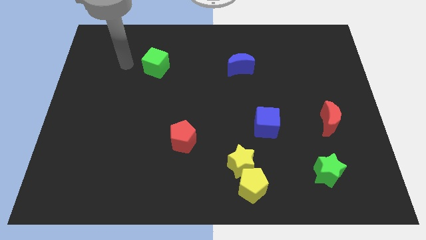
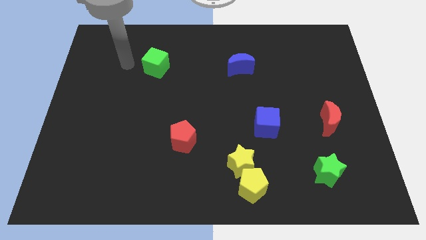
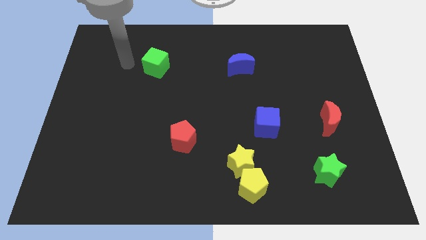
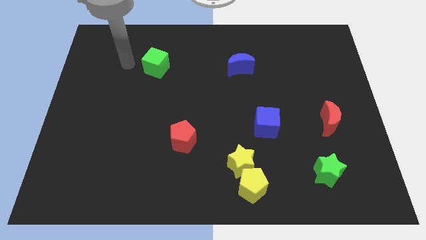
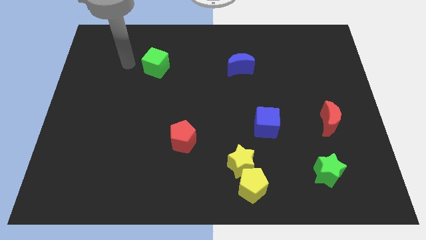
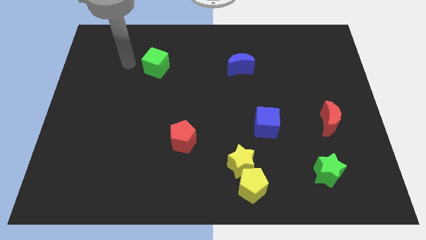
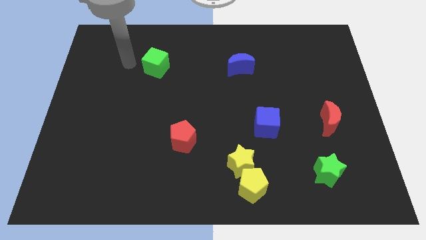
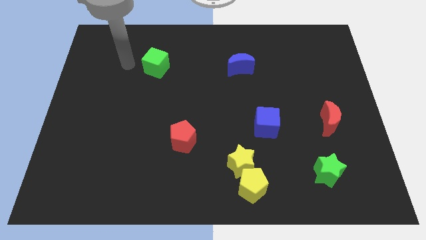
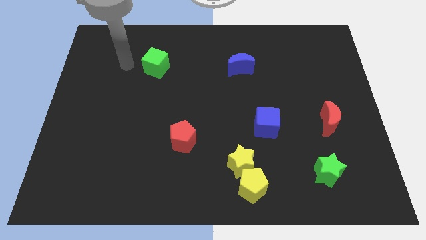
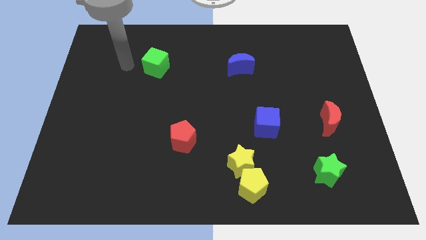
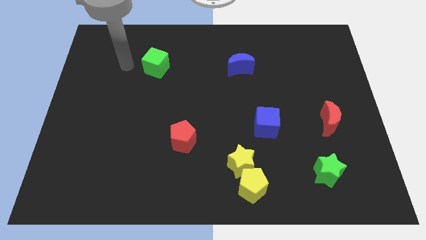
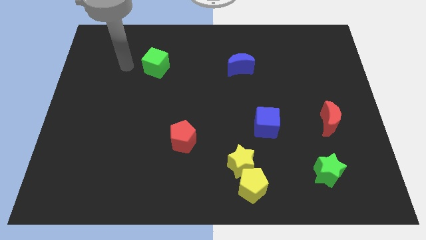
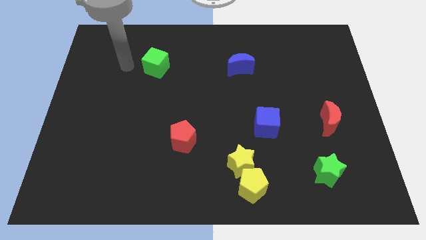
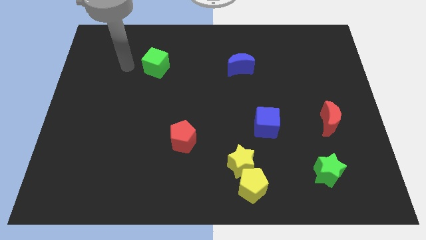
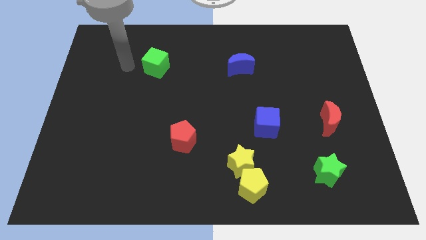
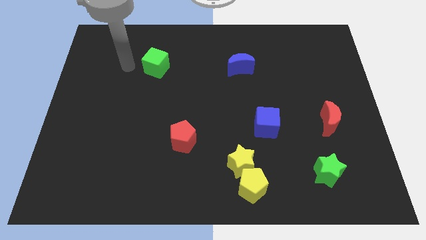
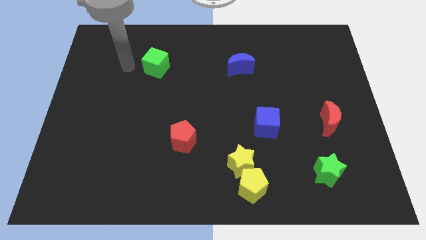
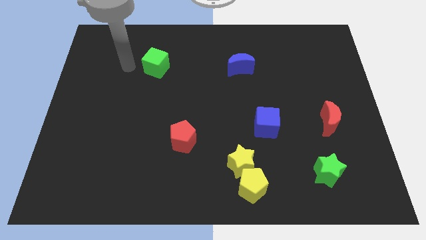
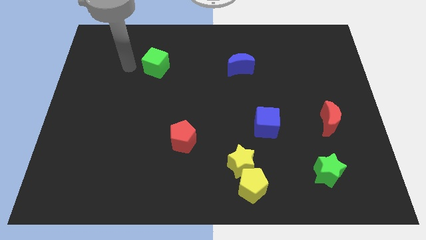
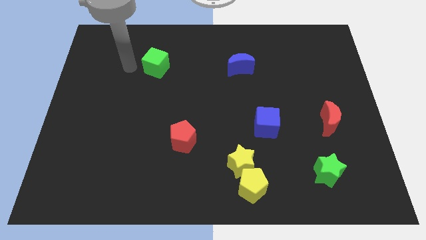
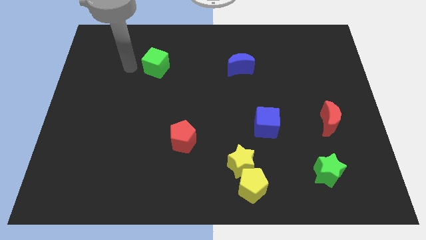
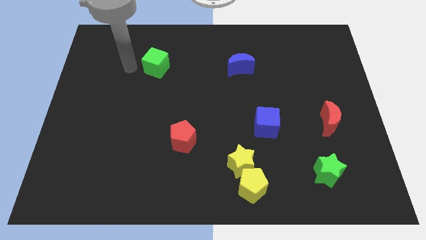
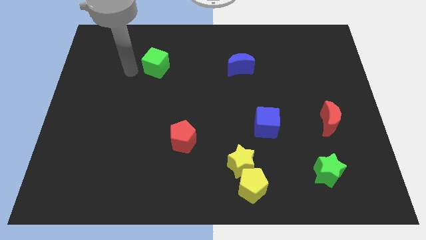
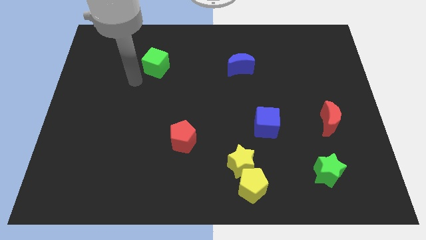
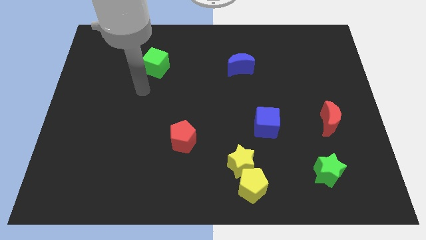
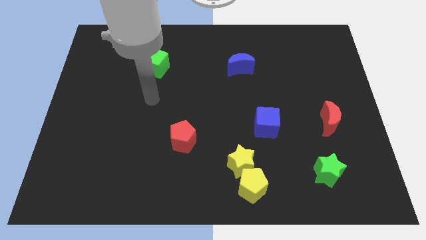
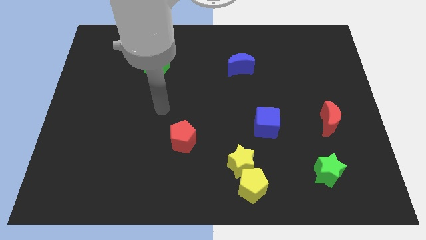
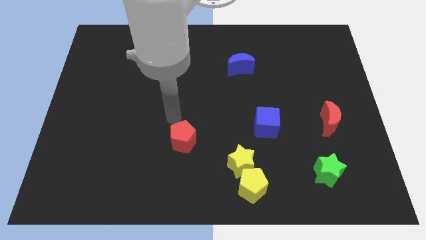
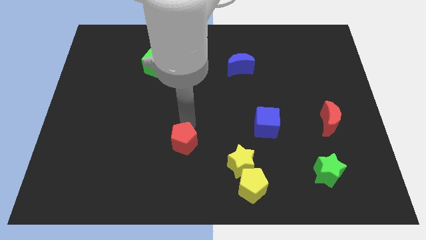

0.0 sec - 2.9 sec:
move your arm to the top of the red pentagon

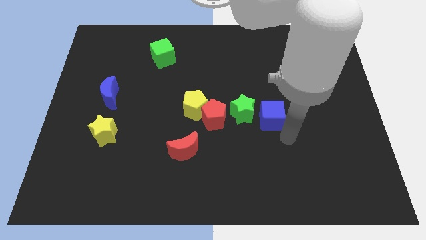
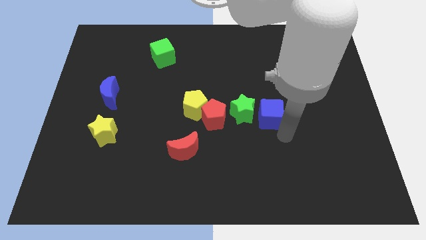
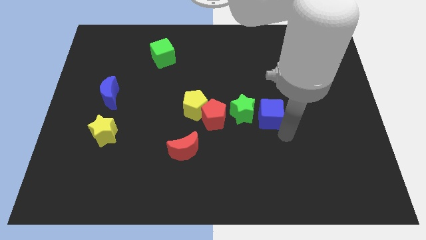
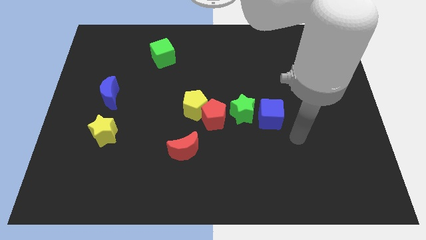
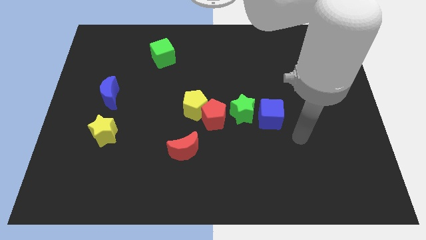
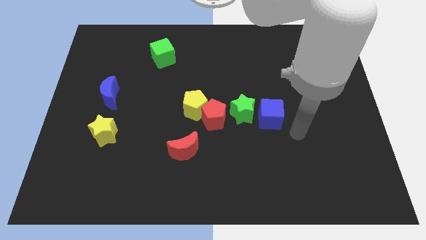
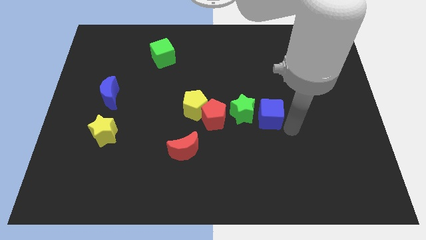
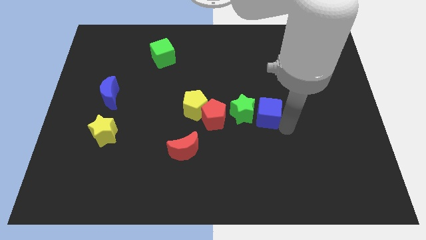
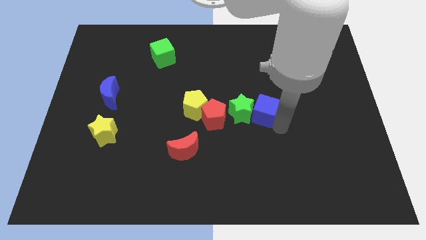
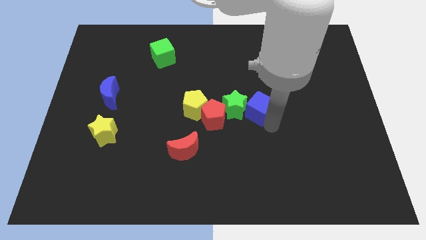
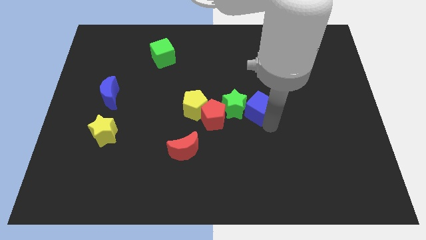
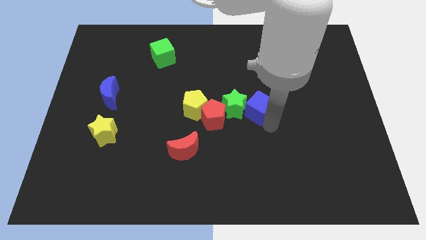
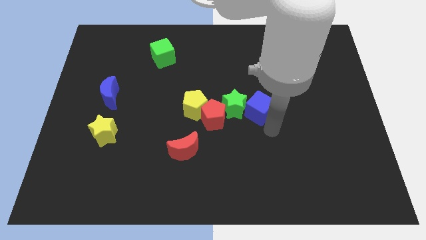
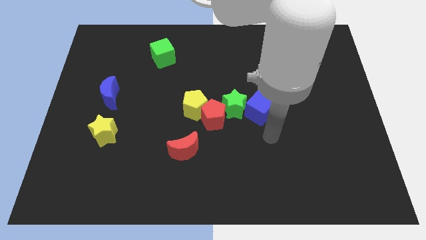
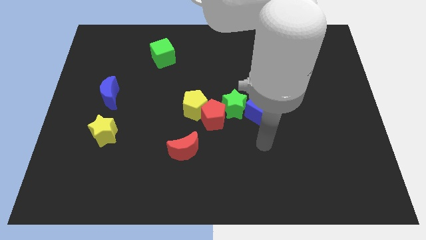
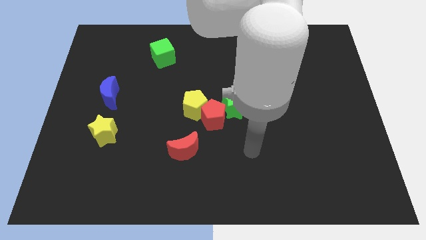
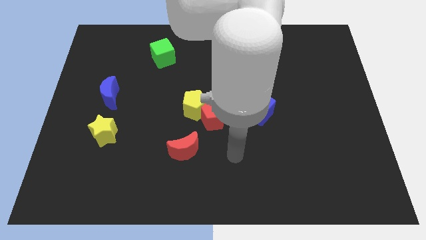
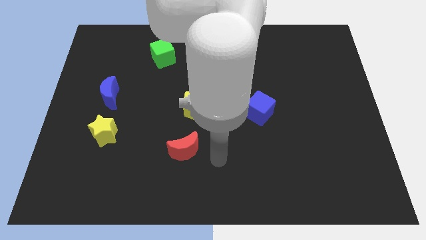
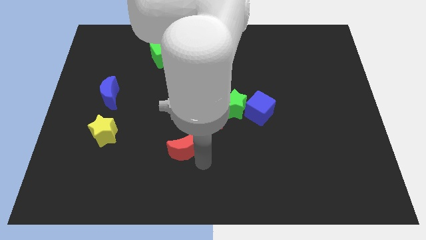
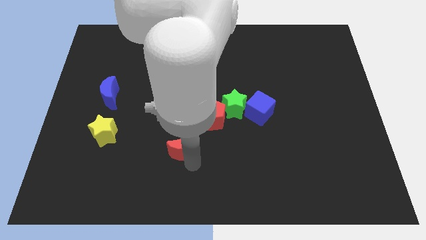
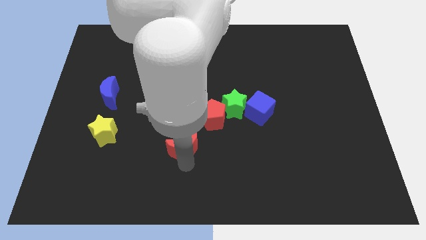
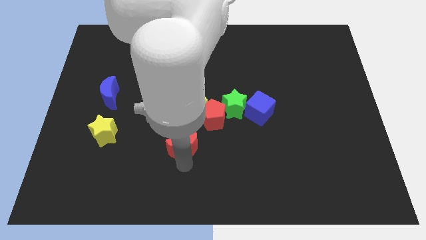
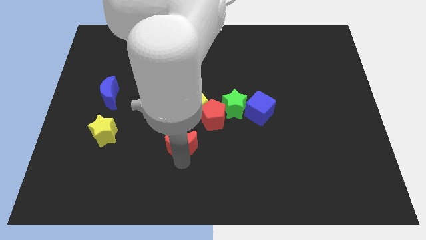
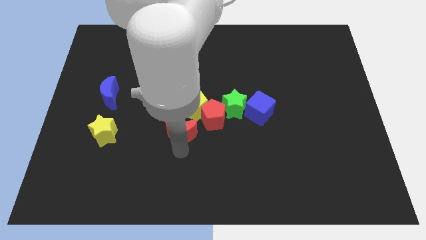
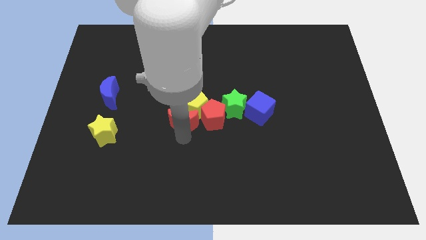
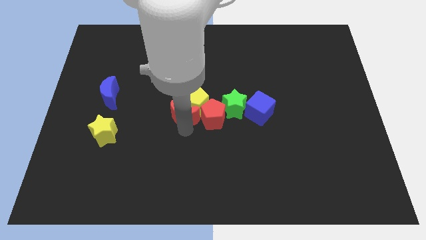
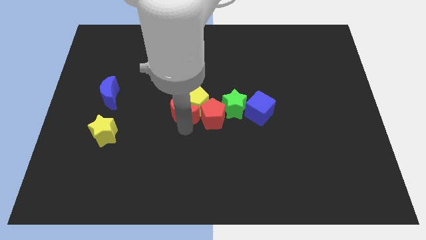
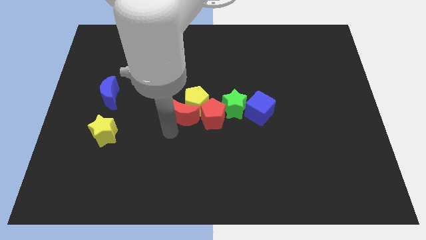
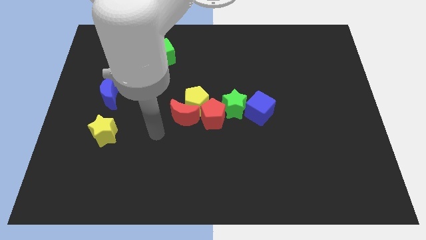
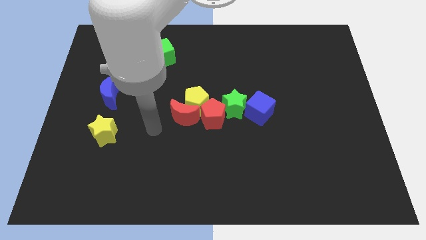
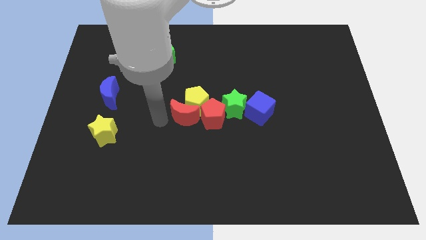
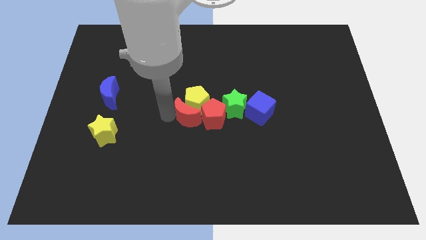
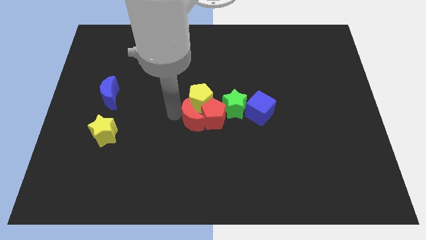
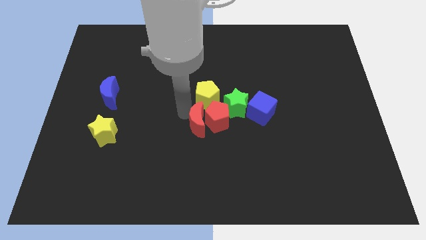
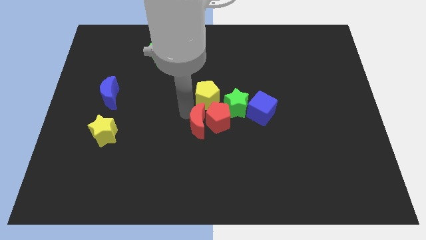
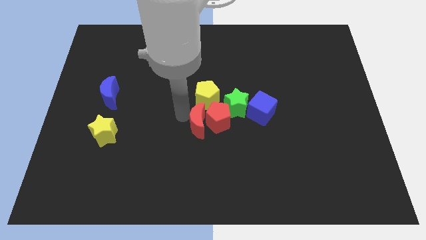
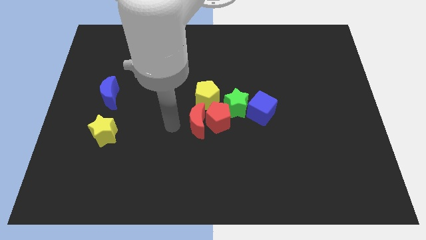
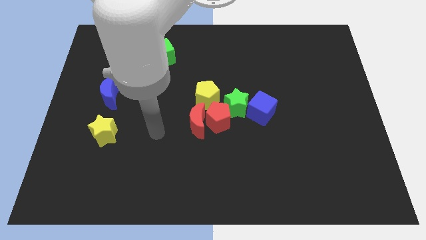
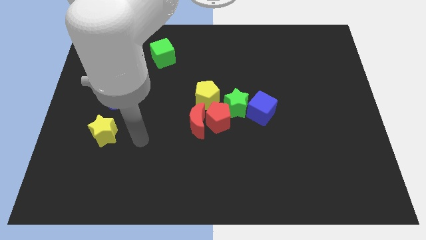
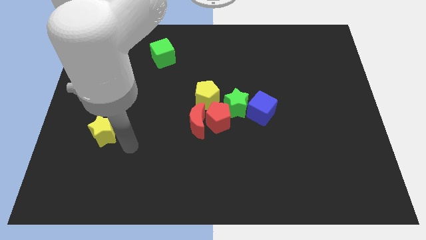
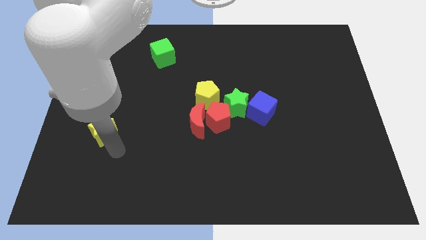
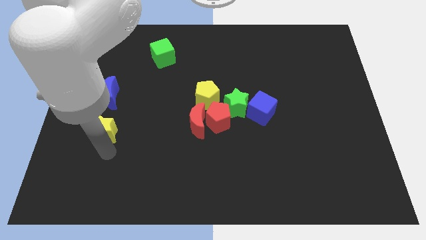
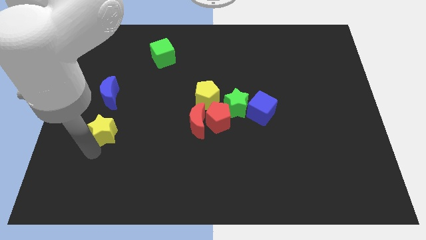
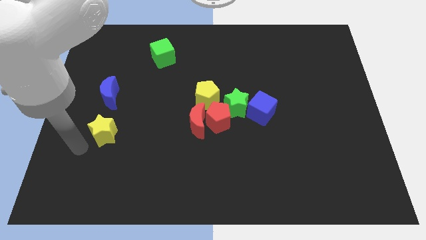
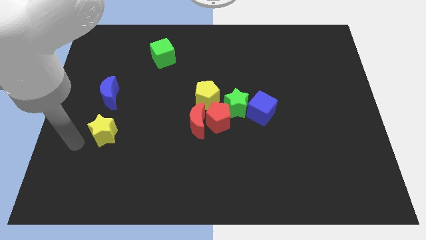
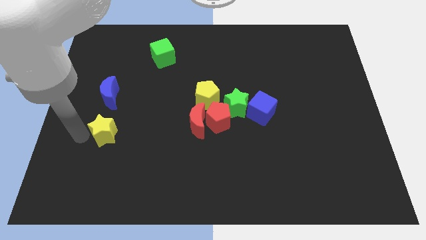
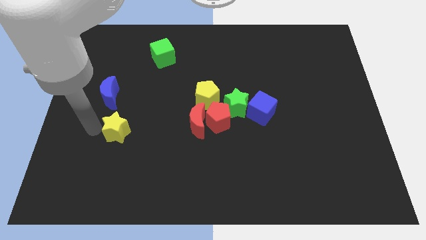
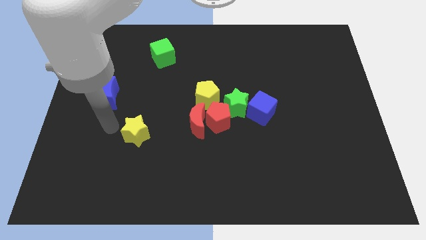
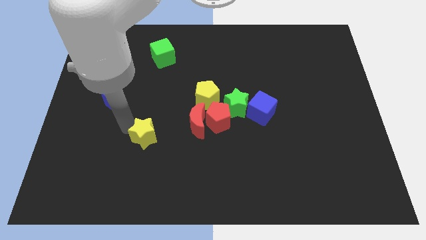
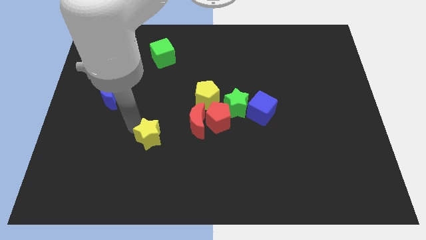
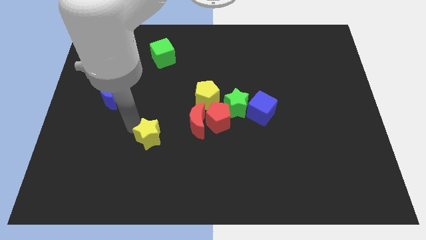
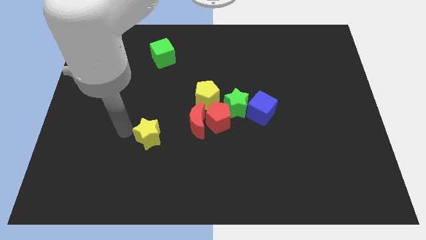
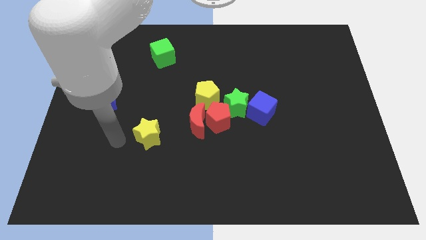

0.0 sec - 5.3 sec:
move the yellow star to the left side of the red moon

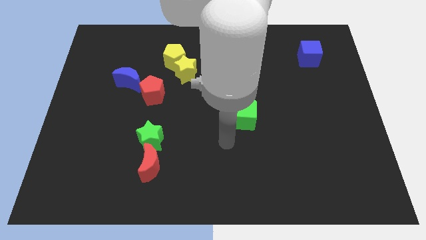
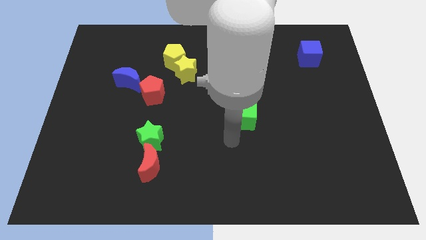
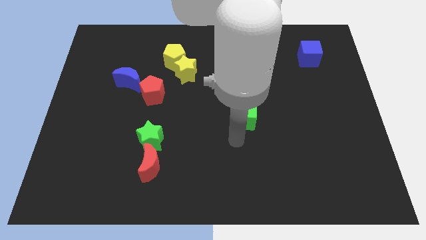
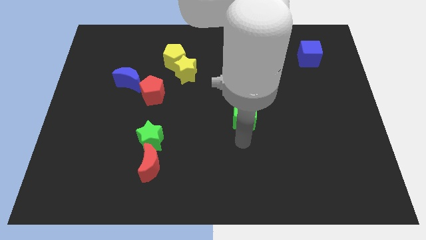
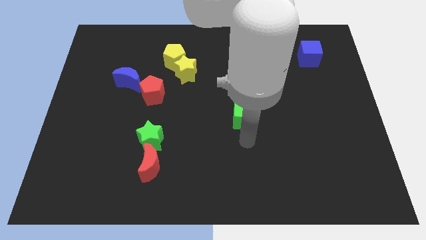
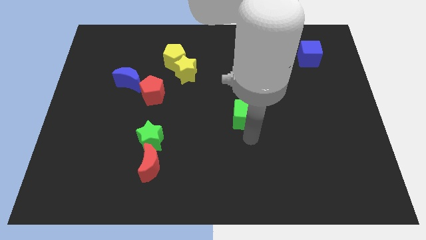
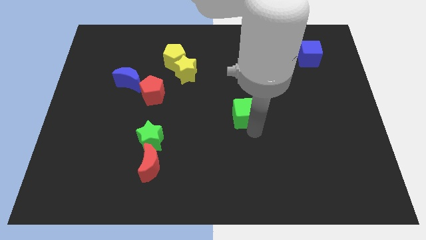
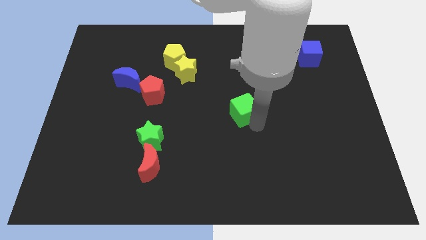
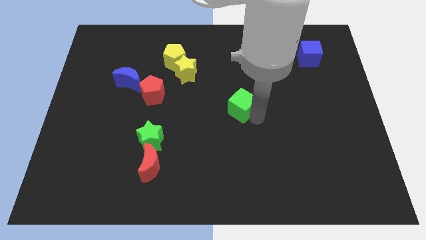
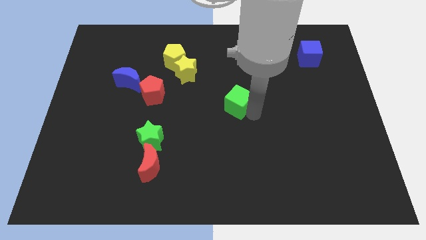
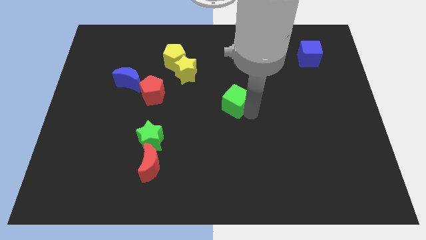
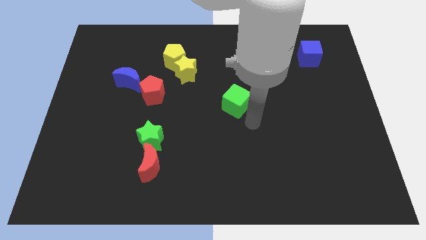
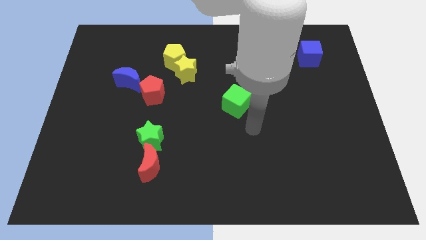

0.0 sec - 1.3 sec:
place the green cube at the center of the board
